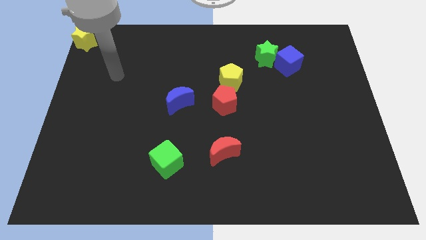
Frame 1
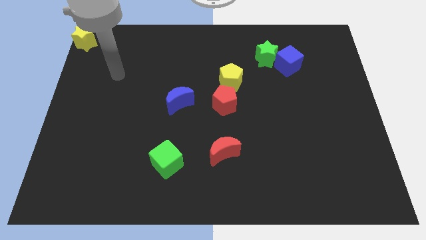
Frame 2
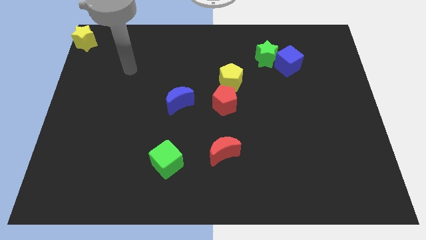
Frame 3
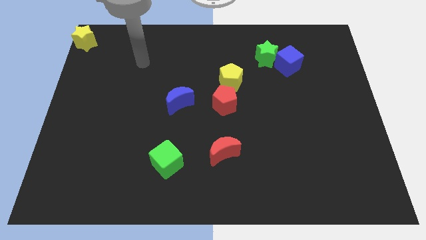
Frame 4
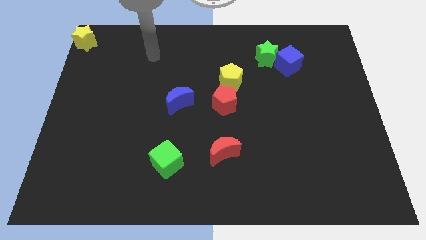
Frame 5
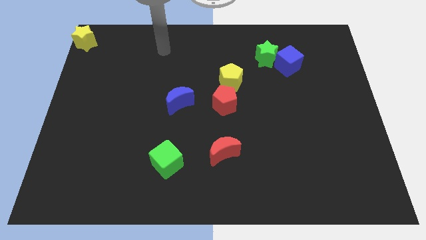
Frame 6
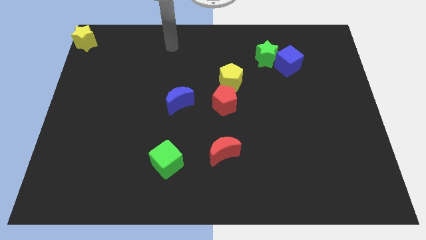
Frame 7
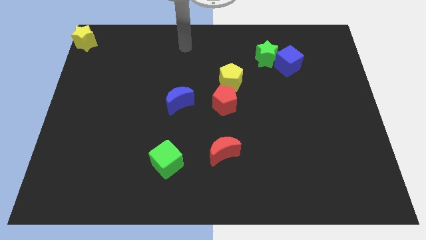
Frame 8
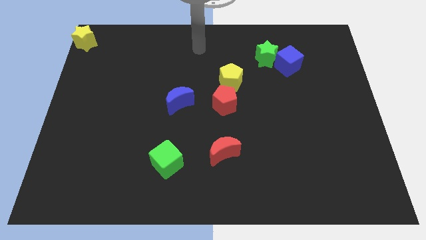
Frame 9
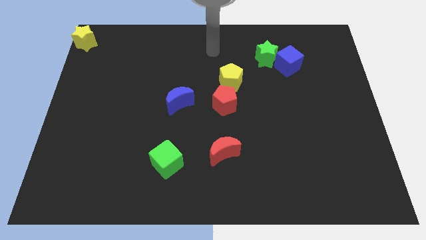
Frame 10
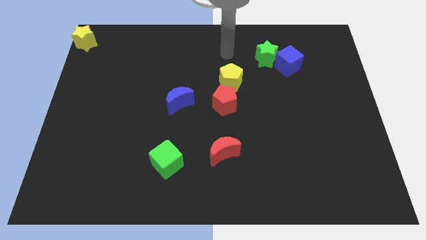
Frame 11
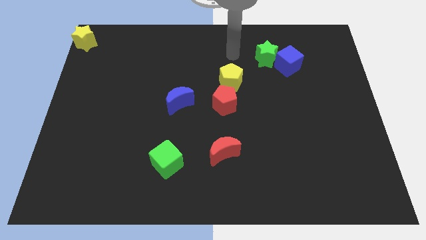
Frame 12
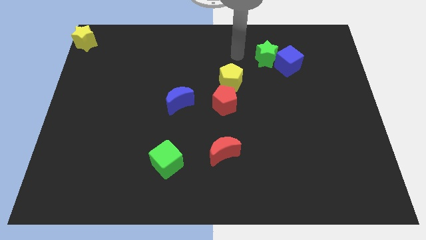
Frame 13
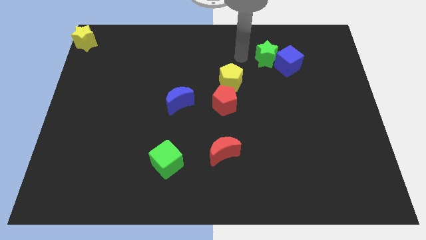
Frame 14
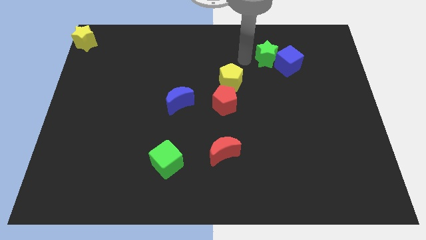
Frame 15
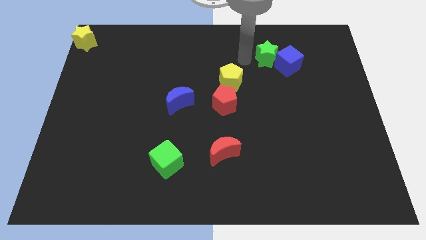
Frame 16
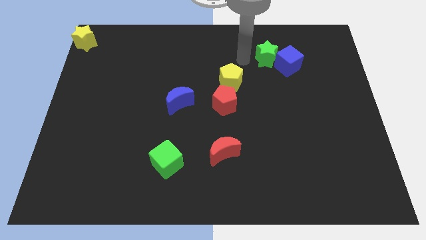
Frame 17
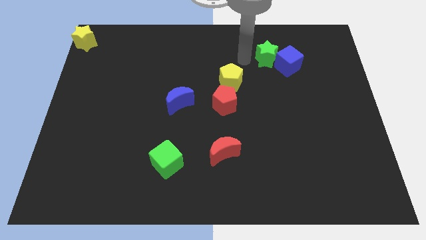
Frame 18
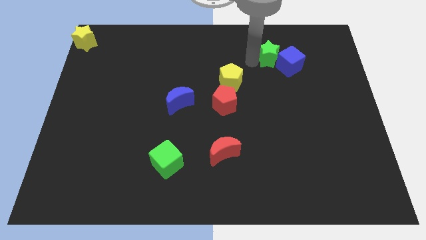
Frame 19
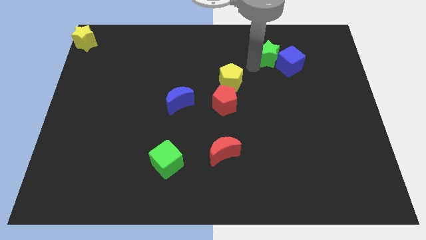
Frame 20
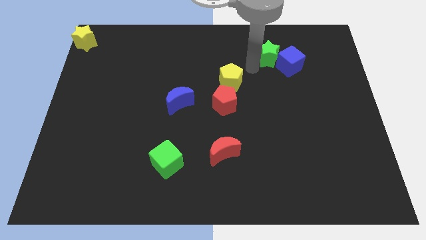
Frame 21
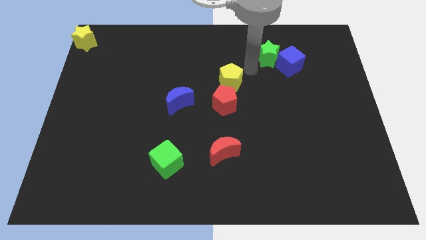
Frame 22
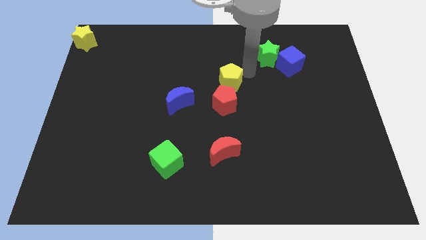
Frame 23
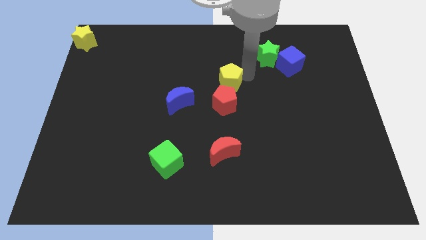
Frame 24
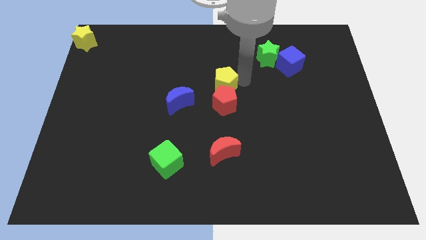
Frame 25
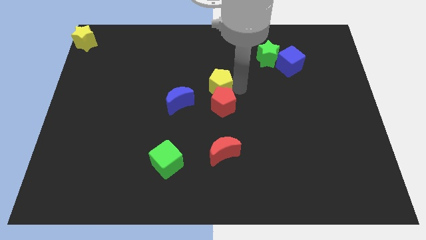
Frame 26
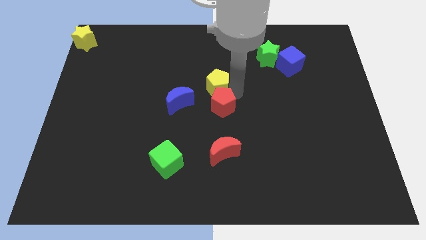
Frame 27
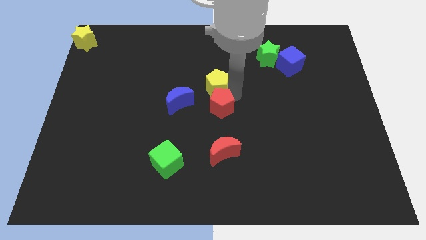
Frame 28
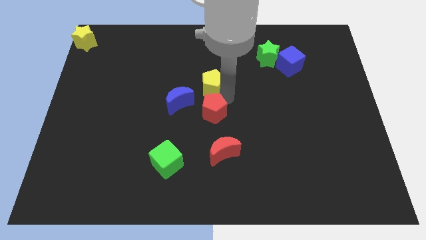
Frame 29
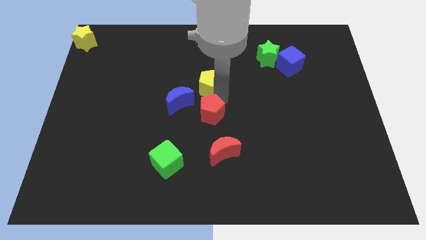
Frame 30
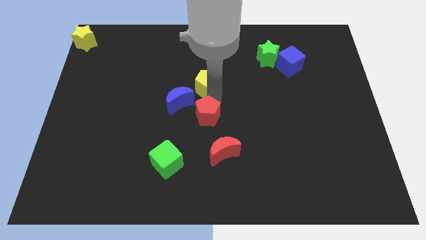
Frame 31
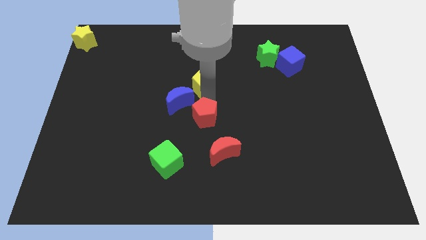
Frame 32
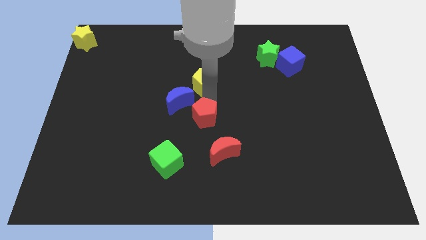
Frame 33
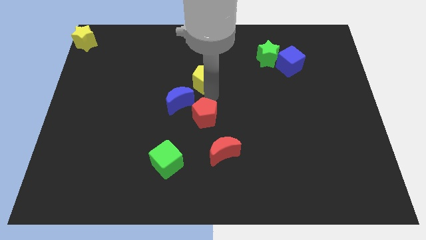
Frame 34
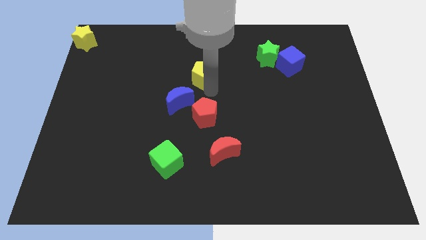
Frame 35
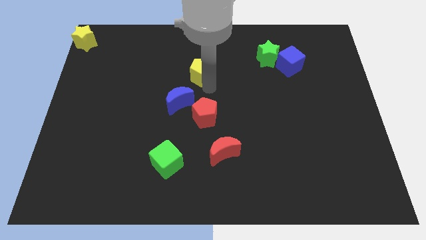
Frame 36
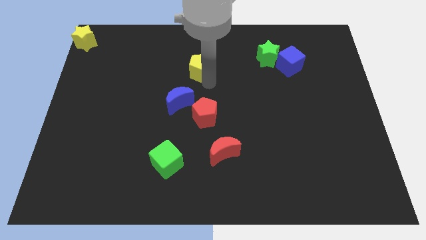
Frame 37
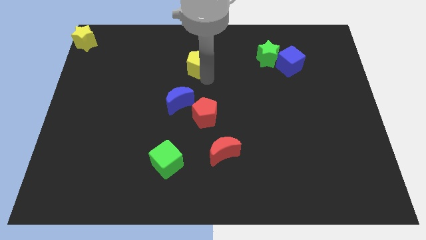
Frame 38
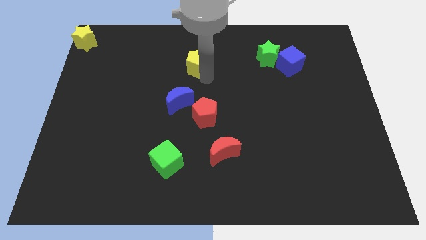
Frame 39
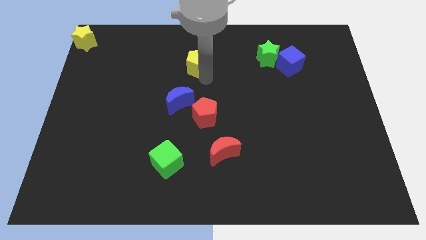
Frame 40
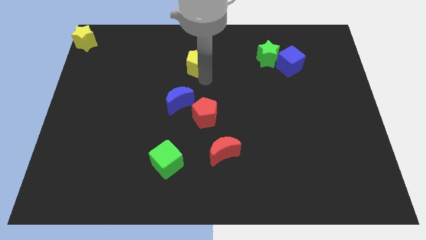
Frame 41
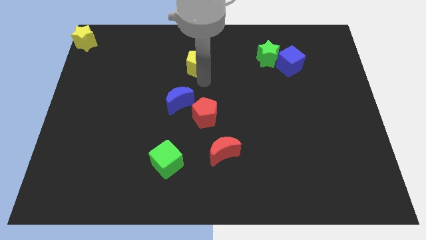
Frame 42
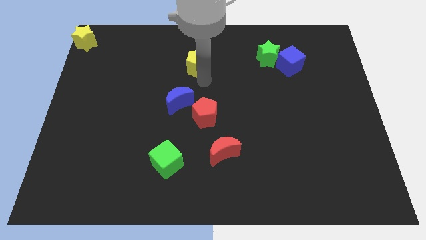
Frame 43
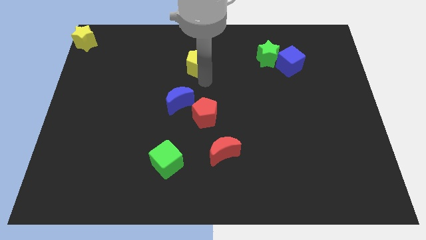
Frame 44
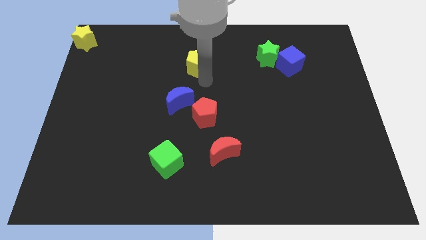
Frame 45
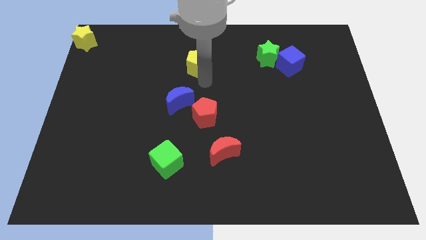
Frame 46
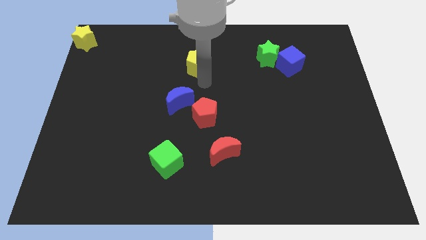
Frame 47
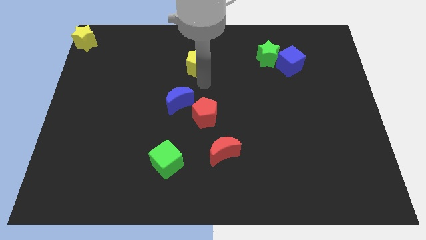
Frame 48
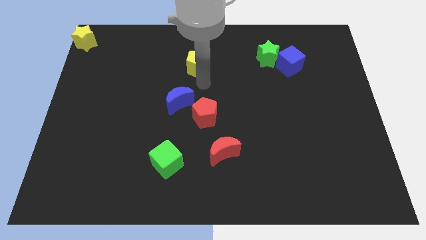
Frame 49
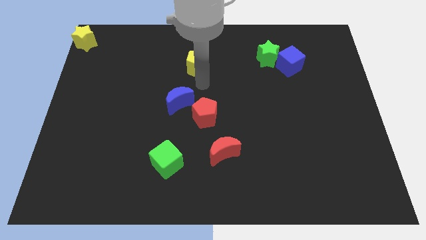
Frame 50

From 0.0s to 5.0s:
push the yellow pentagon to the top center of the board

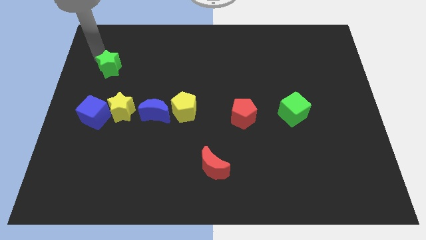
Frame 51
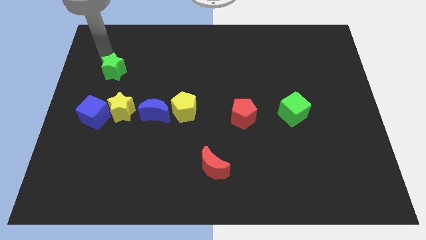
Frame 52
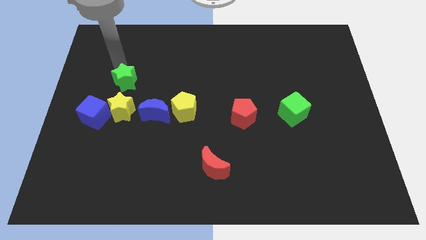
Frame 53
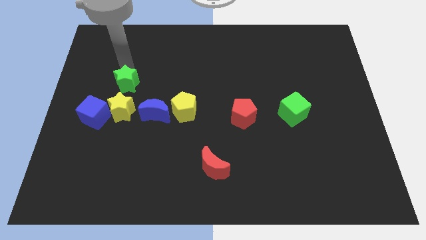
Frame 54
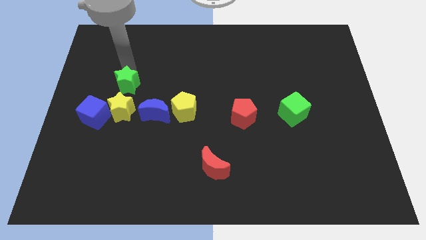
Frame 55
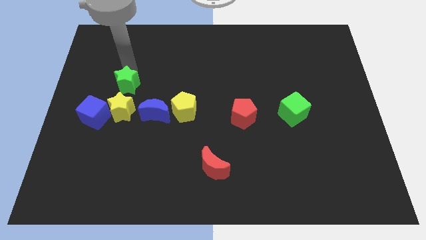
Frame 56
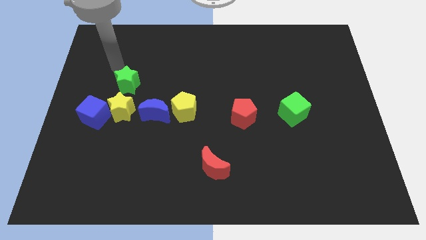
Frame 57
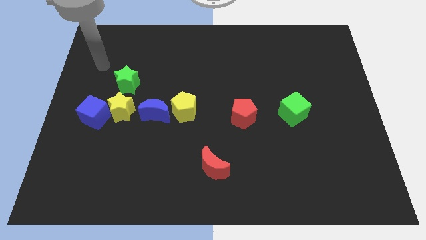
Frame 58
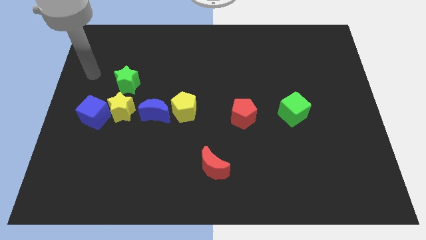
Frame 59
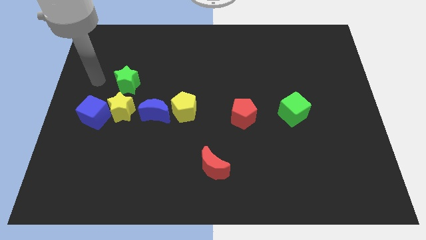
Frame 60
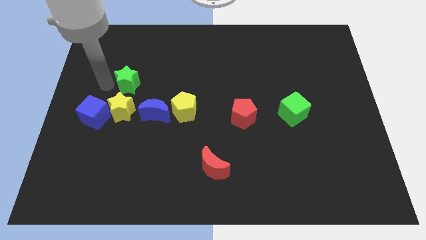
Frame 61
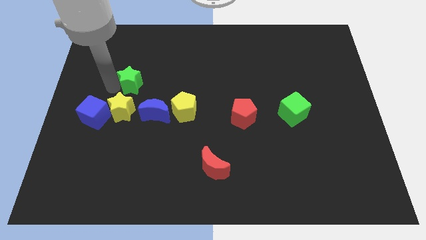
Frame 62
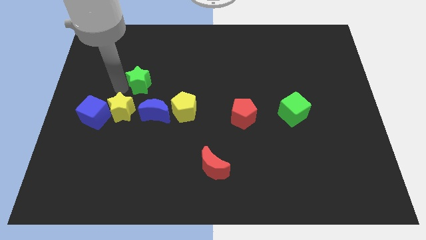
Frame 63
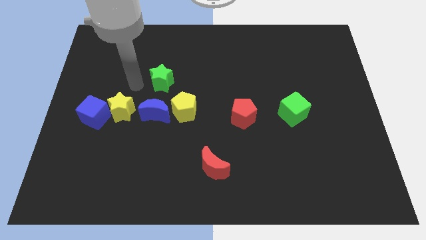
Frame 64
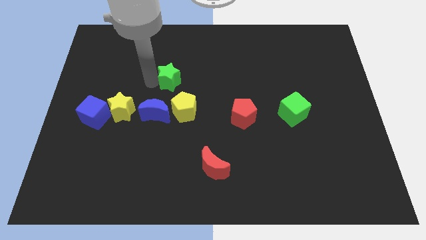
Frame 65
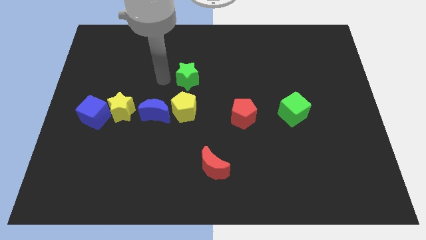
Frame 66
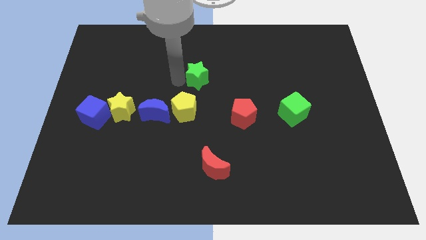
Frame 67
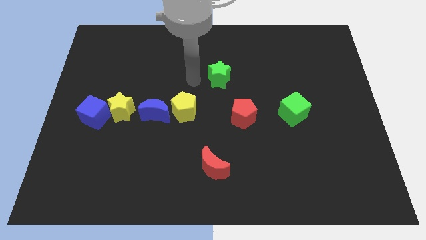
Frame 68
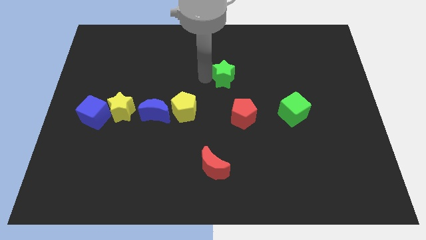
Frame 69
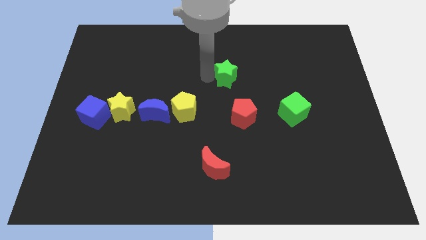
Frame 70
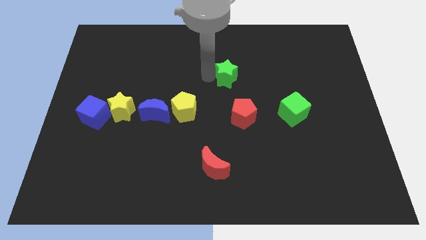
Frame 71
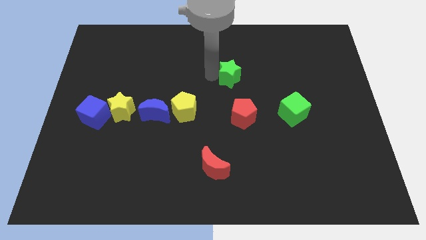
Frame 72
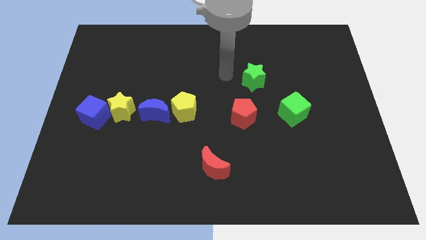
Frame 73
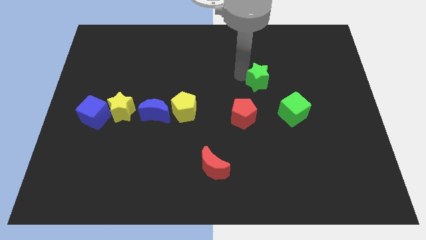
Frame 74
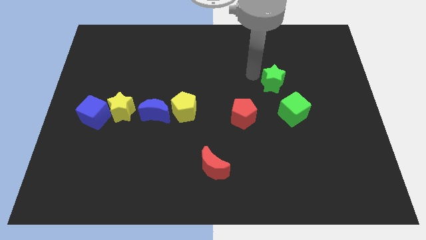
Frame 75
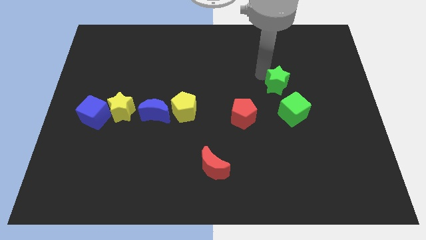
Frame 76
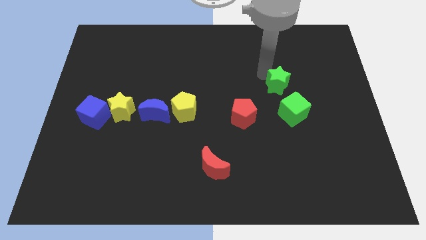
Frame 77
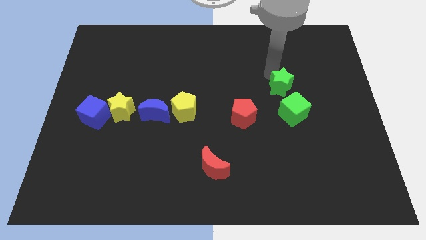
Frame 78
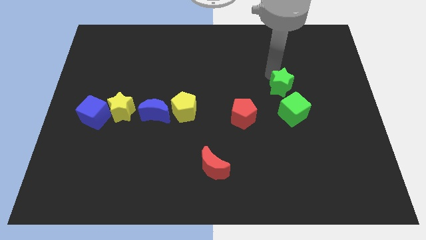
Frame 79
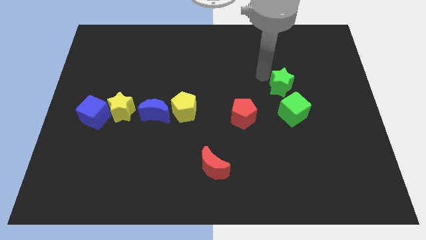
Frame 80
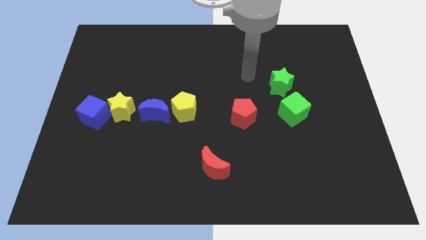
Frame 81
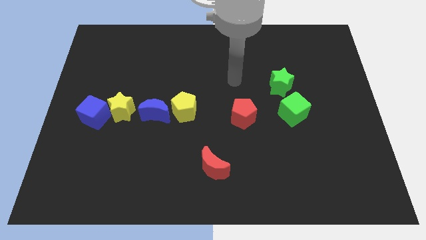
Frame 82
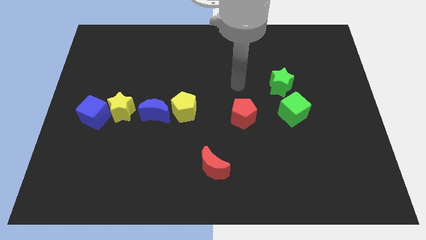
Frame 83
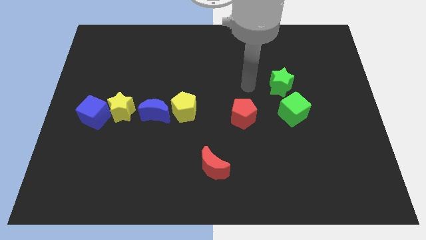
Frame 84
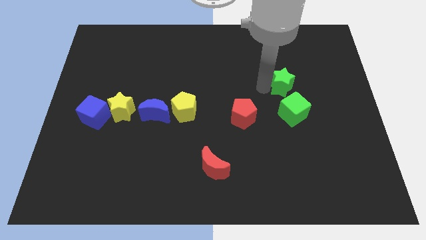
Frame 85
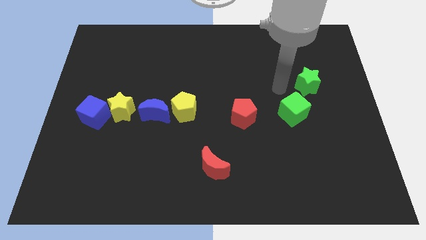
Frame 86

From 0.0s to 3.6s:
place the green star to the top of the green cube

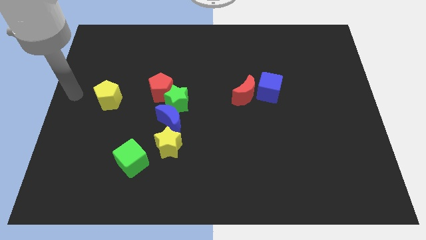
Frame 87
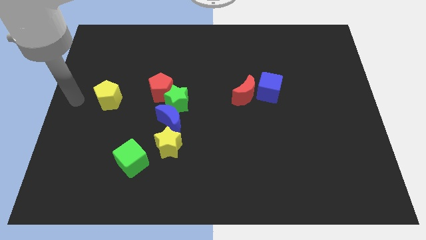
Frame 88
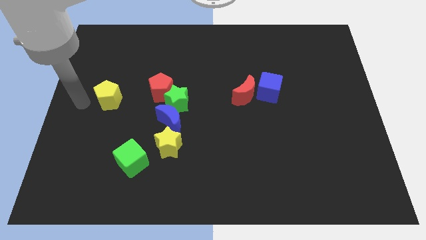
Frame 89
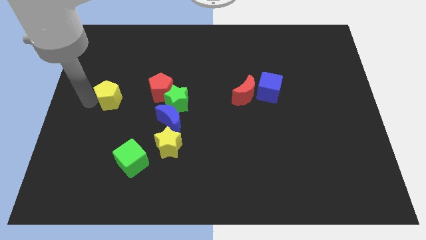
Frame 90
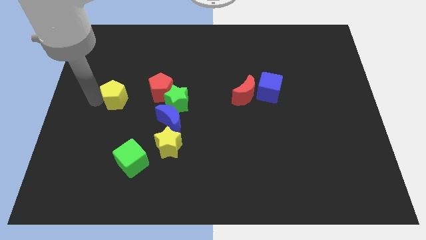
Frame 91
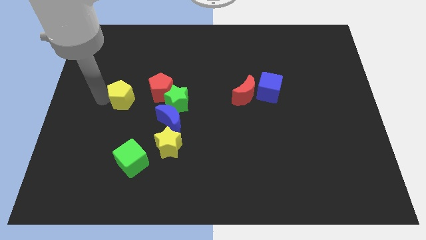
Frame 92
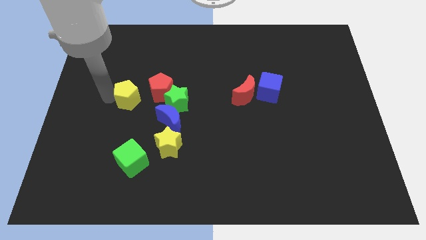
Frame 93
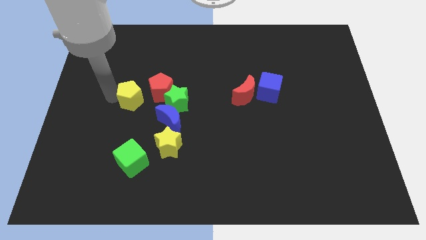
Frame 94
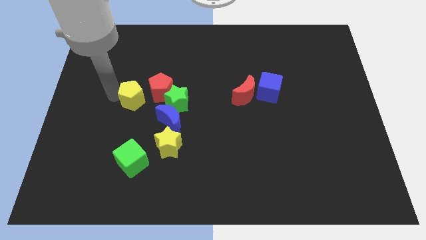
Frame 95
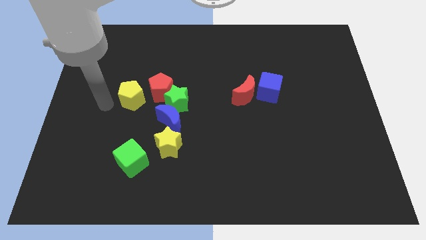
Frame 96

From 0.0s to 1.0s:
move the yellow pentagon above the green cube
